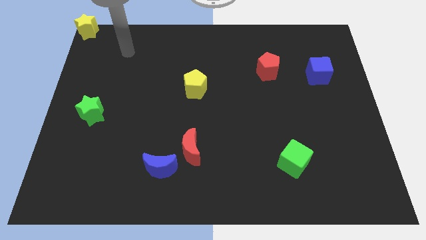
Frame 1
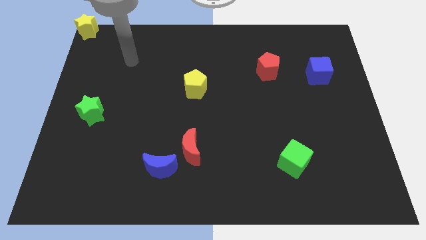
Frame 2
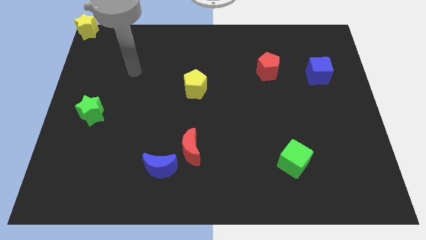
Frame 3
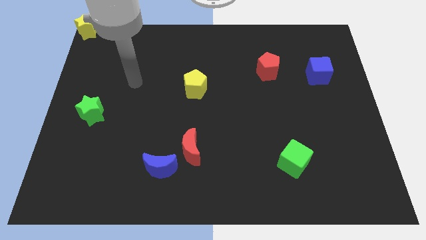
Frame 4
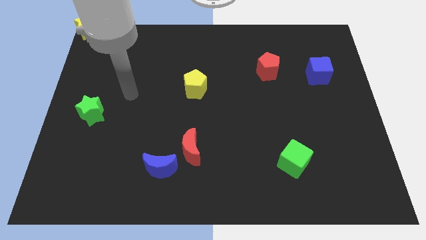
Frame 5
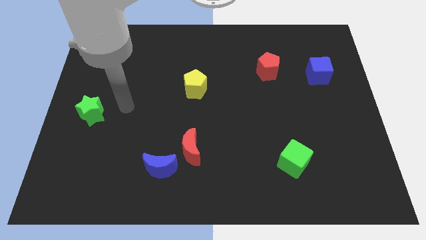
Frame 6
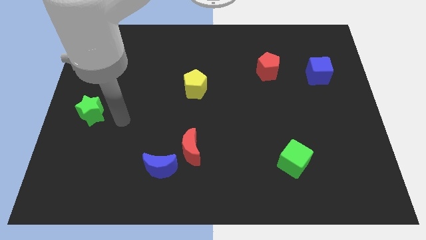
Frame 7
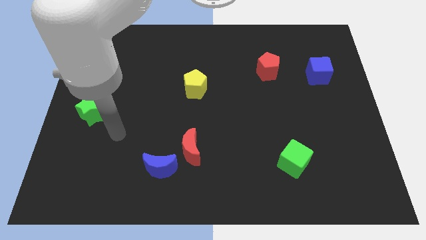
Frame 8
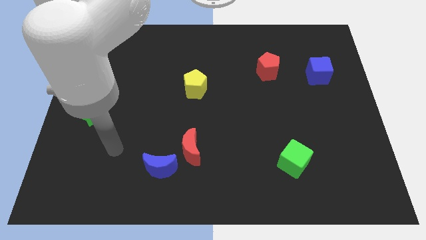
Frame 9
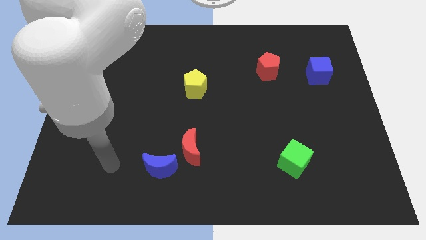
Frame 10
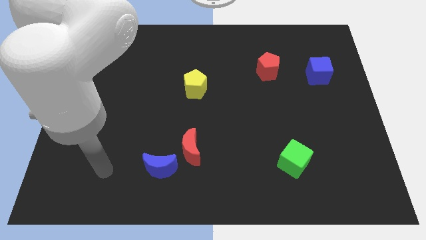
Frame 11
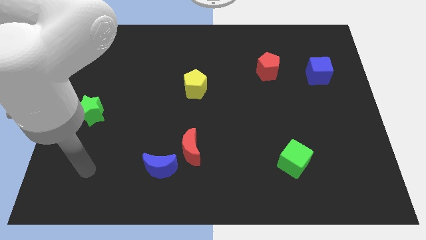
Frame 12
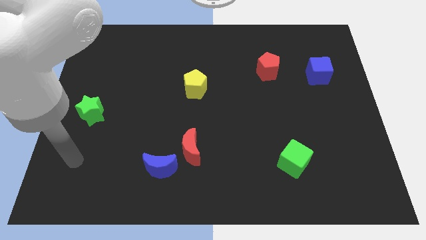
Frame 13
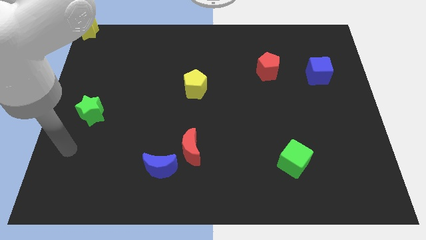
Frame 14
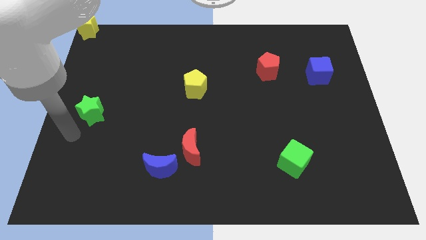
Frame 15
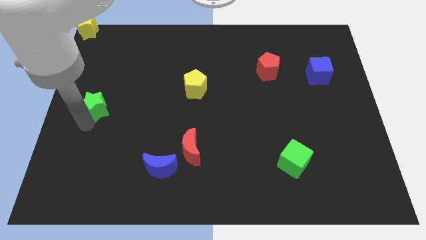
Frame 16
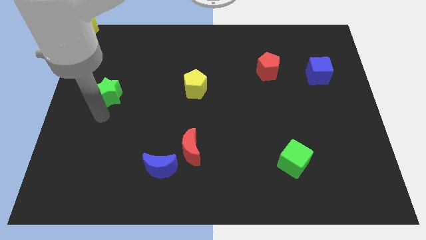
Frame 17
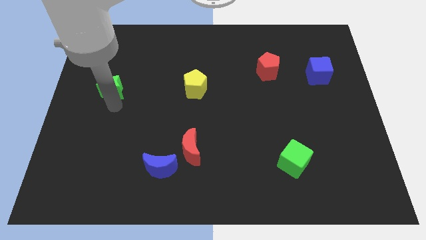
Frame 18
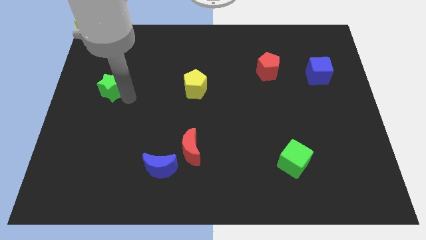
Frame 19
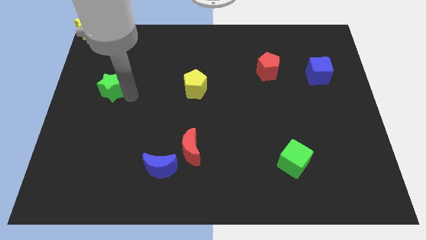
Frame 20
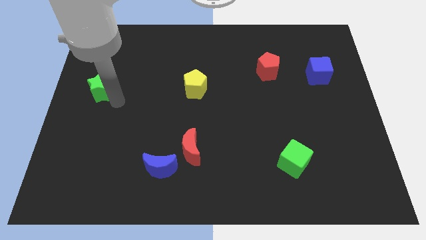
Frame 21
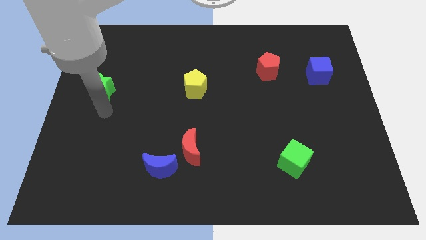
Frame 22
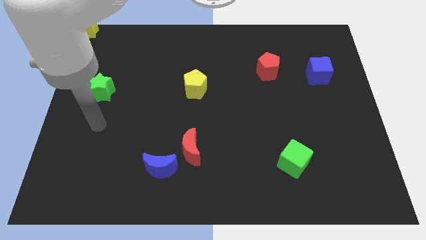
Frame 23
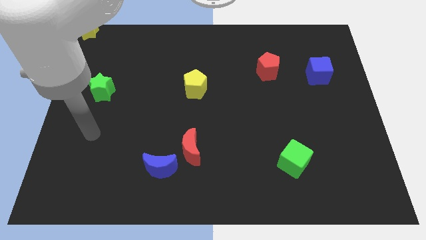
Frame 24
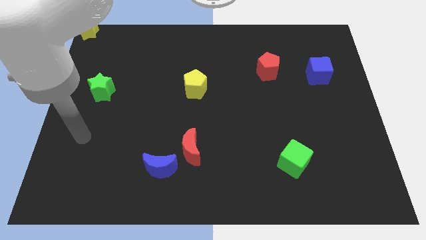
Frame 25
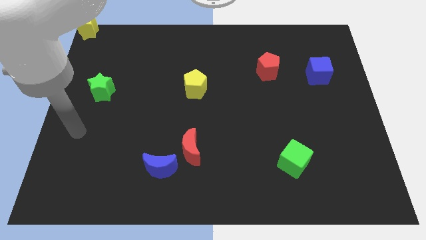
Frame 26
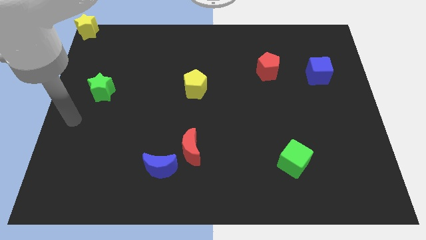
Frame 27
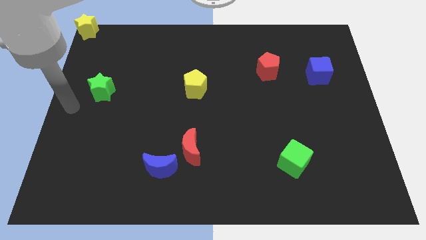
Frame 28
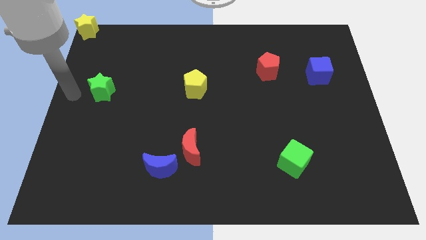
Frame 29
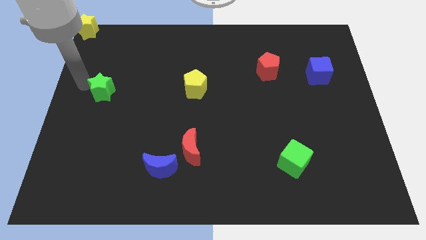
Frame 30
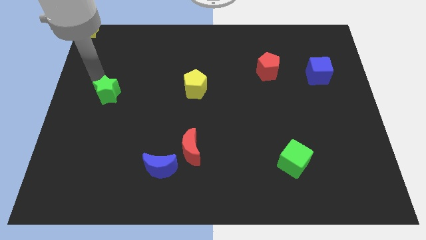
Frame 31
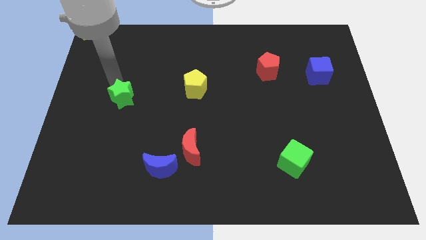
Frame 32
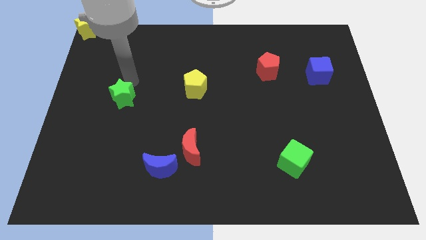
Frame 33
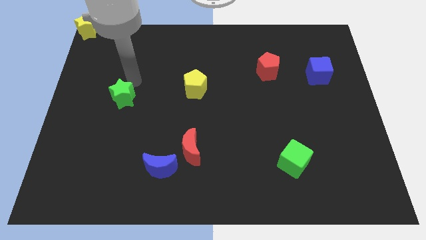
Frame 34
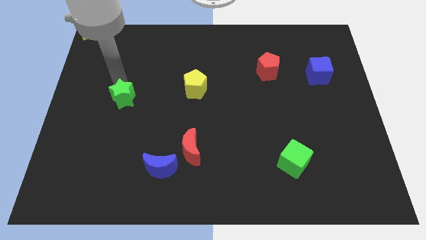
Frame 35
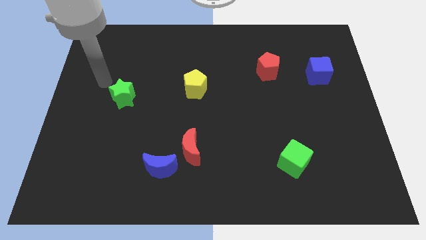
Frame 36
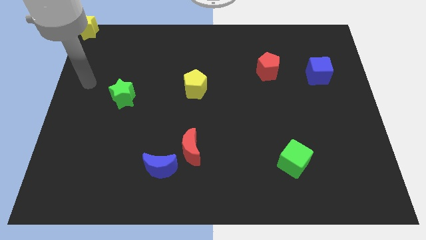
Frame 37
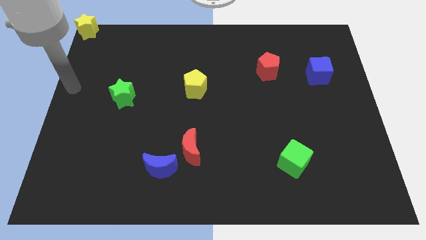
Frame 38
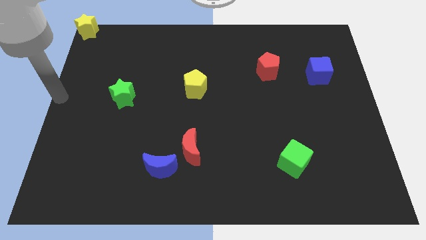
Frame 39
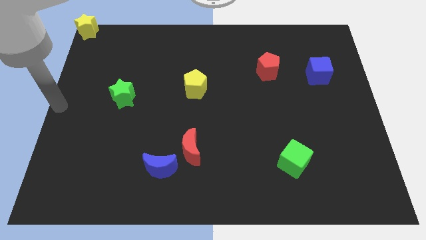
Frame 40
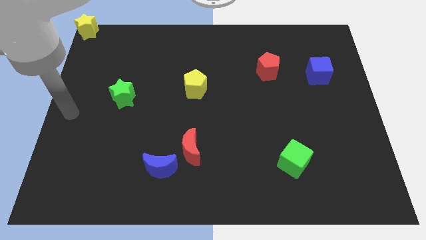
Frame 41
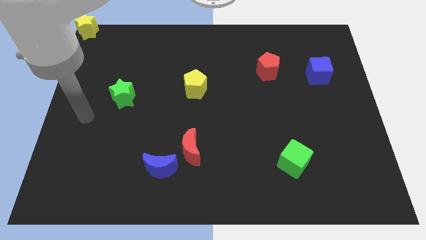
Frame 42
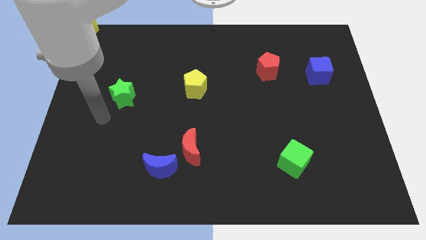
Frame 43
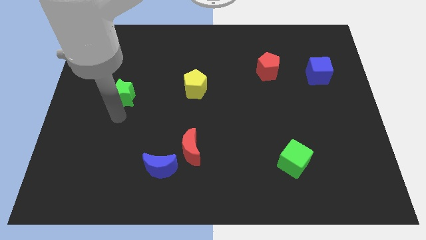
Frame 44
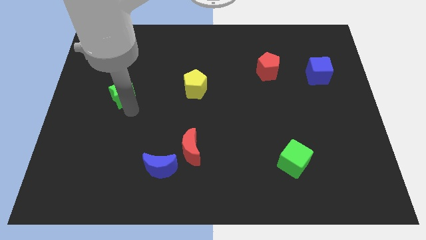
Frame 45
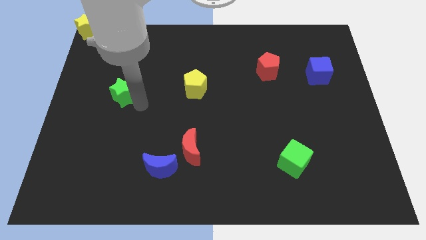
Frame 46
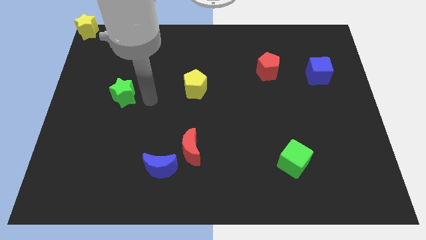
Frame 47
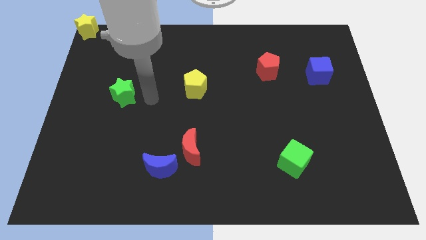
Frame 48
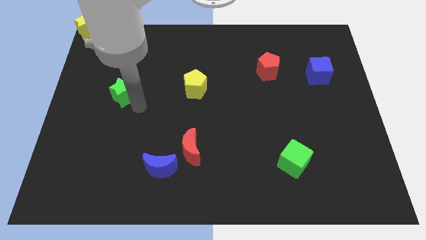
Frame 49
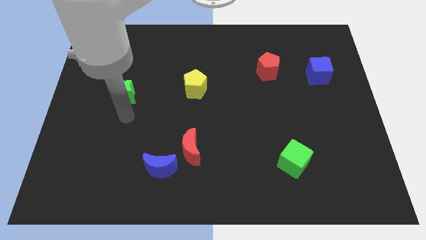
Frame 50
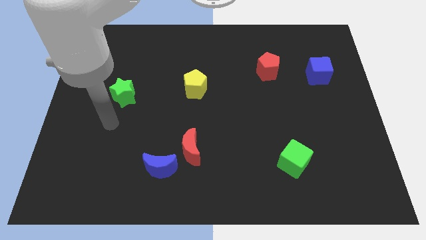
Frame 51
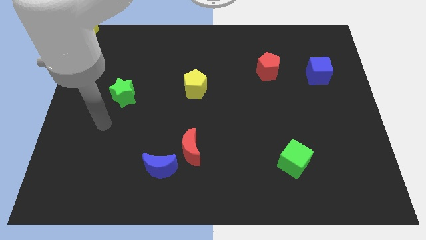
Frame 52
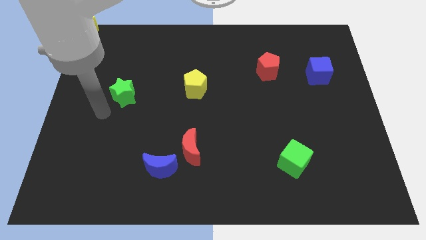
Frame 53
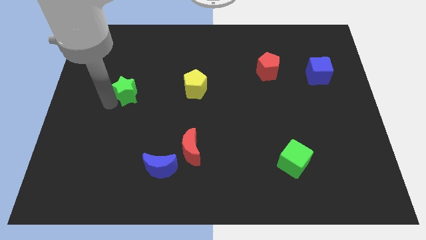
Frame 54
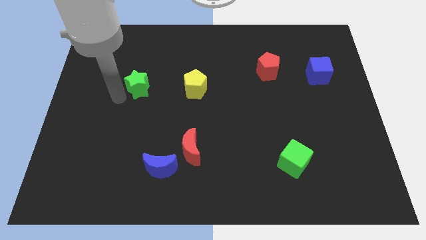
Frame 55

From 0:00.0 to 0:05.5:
place the green star left to the yellow pentagon

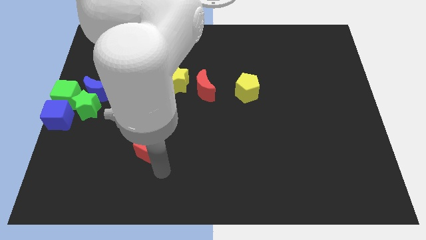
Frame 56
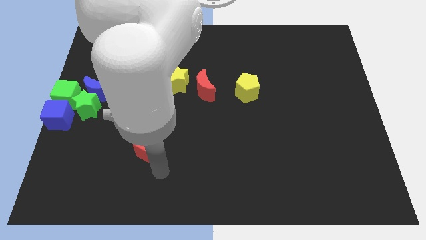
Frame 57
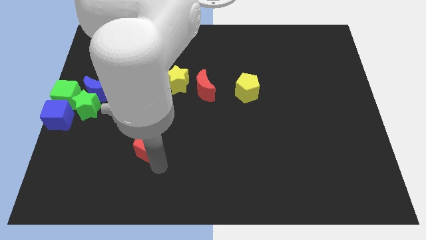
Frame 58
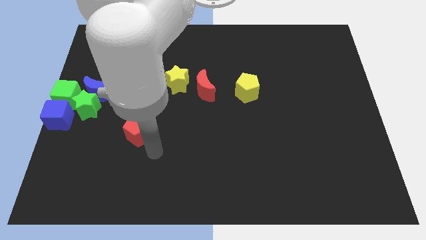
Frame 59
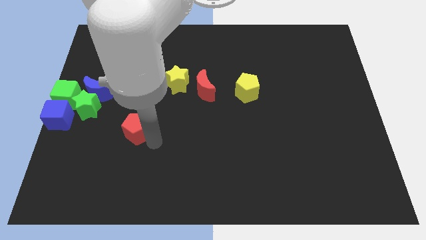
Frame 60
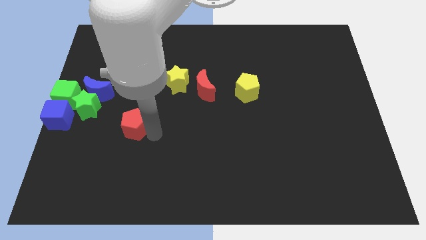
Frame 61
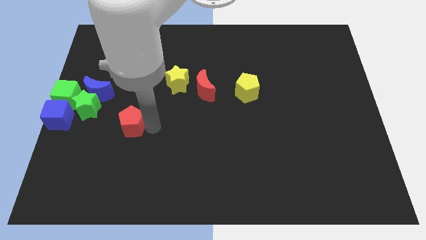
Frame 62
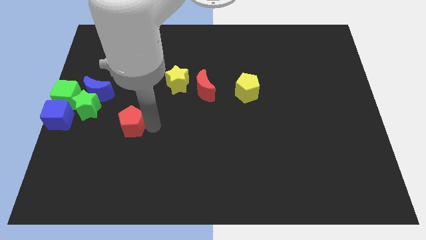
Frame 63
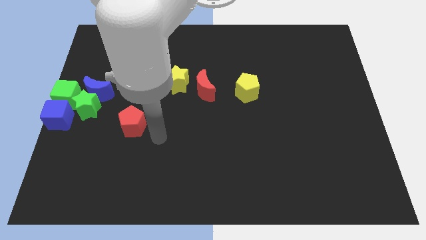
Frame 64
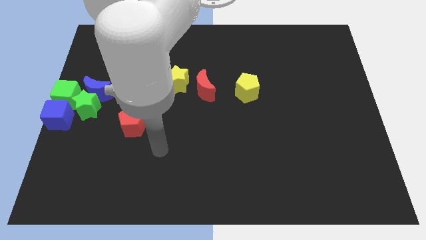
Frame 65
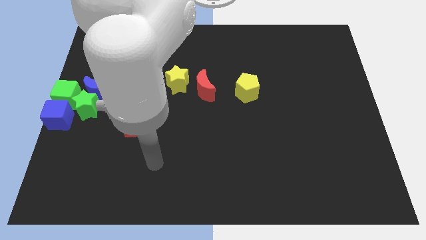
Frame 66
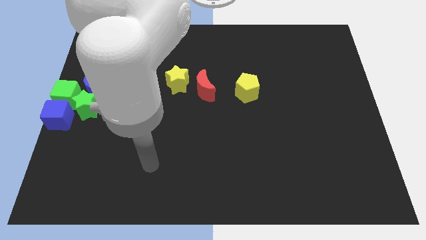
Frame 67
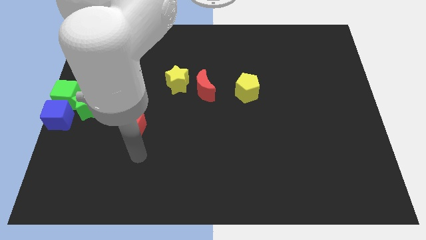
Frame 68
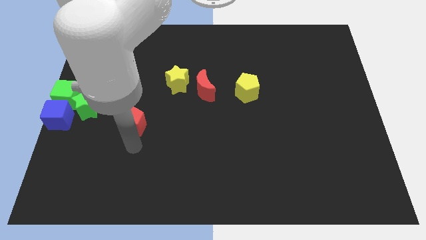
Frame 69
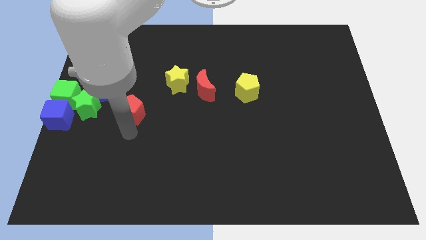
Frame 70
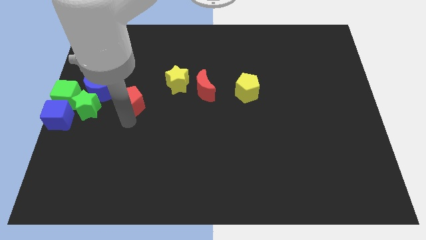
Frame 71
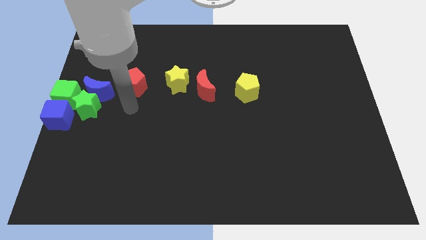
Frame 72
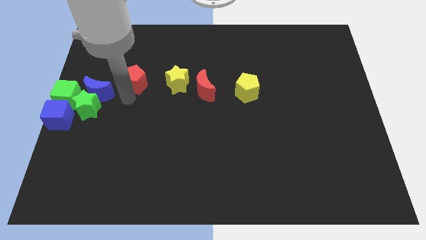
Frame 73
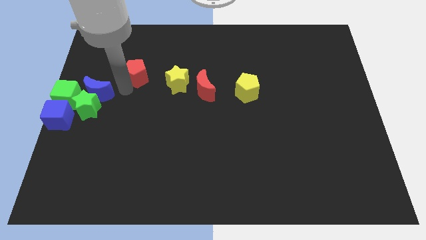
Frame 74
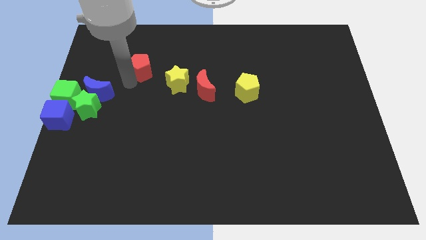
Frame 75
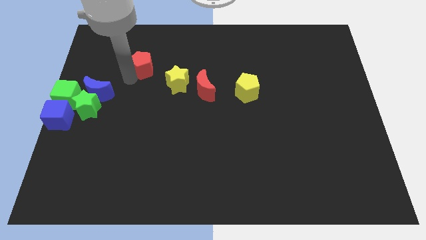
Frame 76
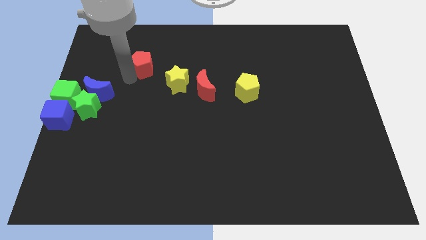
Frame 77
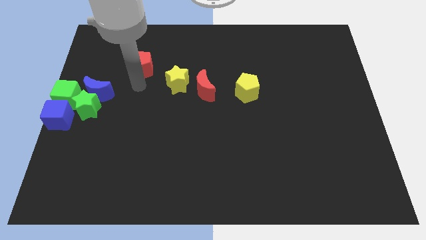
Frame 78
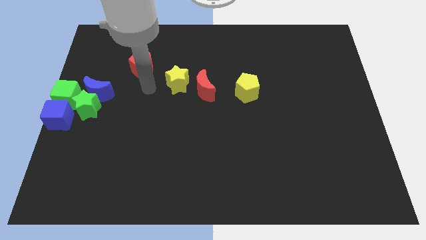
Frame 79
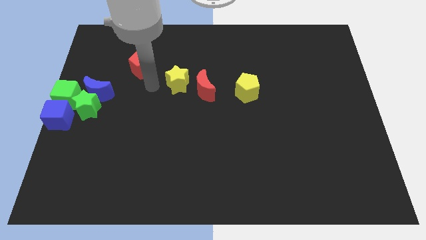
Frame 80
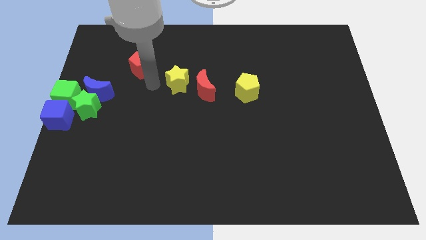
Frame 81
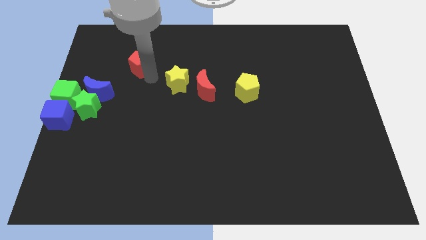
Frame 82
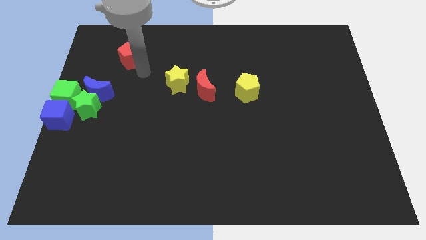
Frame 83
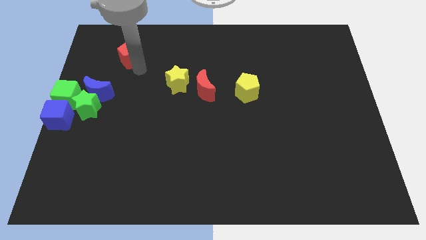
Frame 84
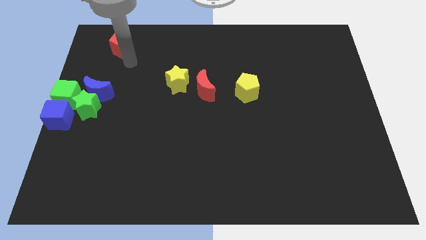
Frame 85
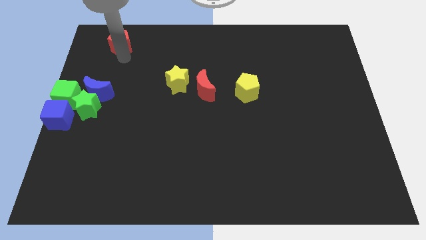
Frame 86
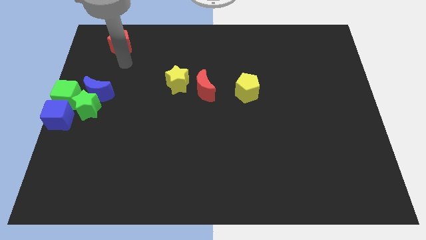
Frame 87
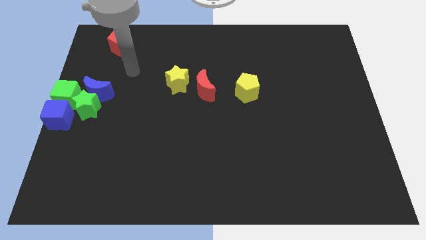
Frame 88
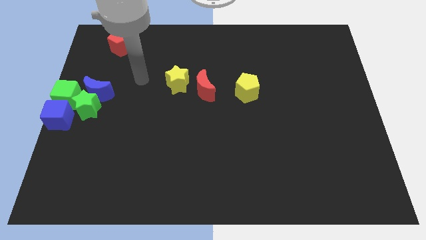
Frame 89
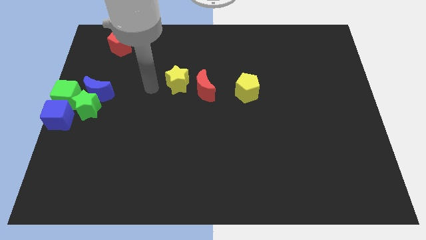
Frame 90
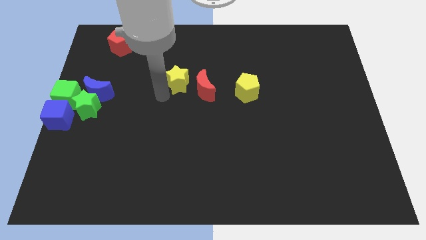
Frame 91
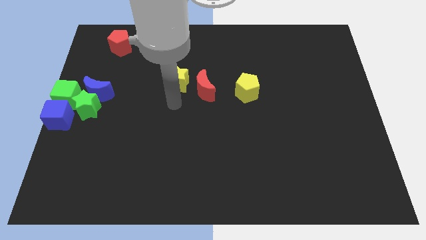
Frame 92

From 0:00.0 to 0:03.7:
move the red pentagon towards the top side of the board
